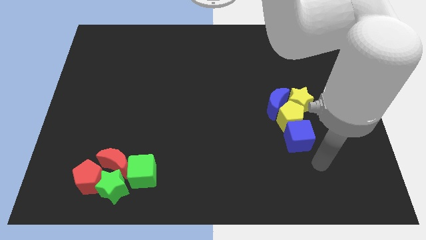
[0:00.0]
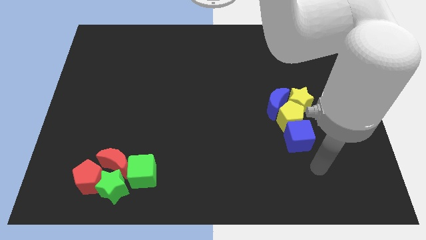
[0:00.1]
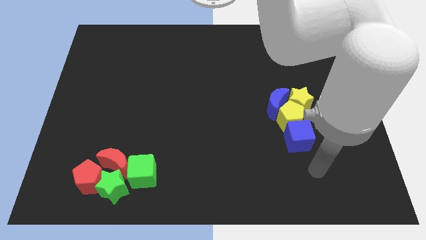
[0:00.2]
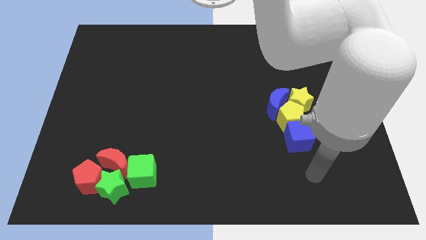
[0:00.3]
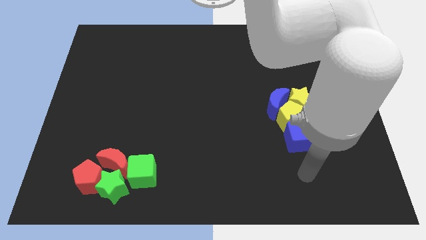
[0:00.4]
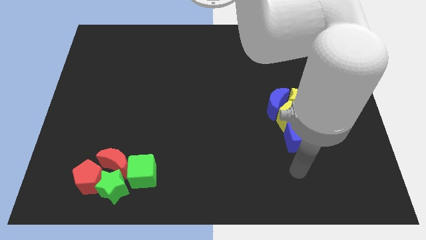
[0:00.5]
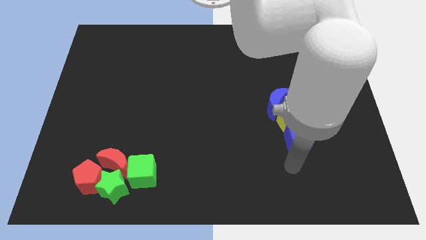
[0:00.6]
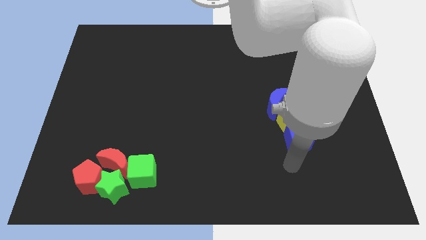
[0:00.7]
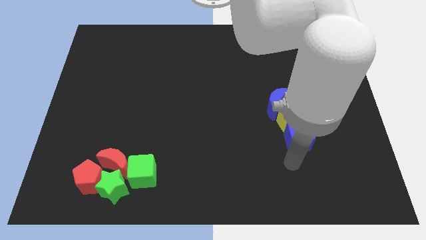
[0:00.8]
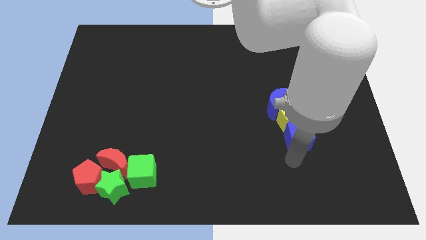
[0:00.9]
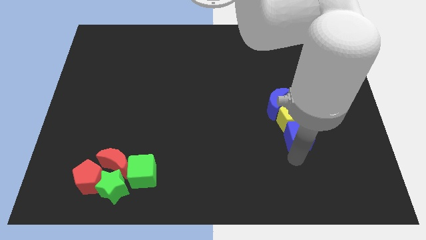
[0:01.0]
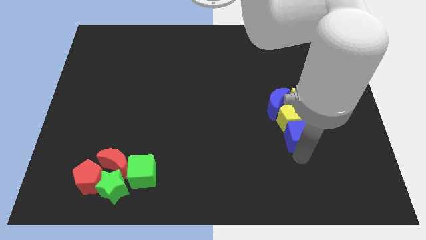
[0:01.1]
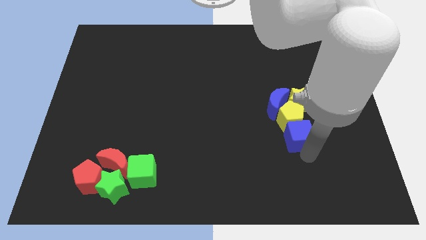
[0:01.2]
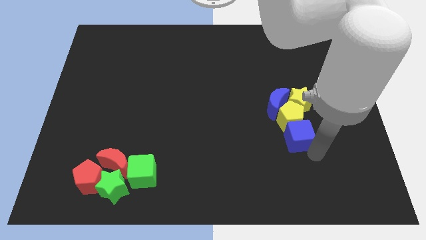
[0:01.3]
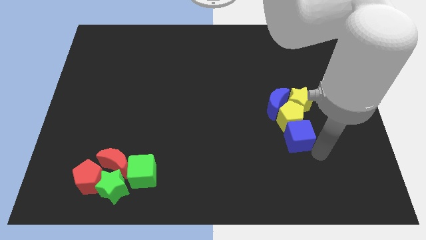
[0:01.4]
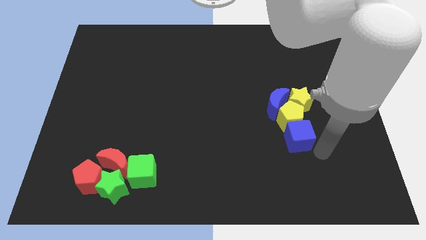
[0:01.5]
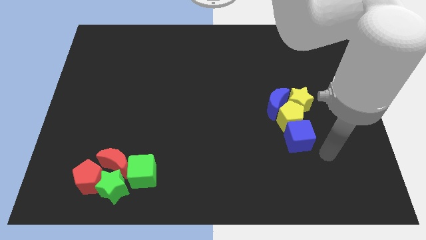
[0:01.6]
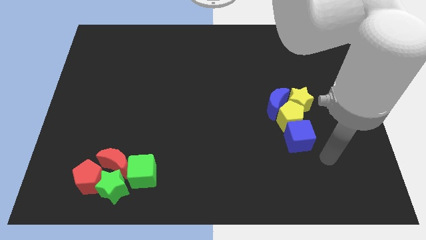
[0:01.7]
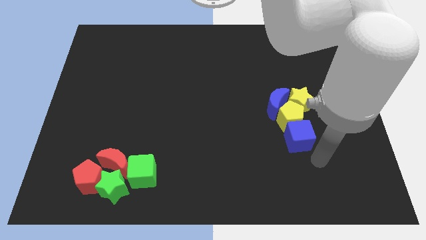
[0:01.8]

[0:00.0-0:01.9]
tap the blue cube

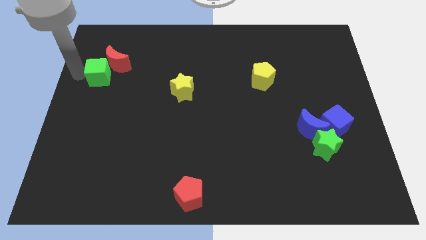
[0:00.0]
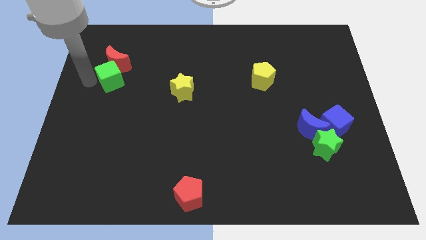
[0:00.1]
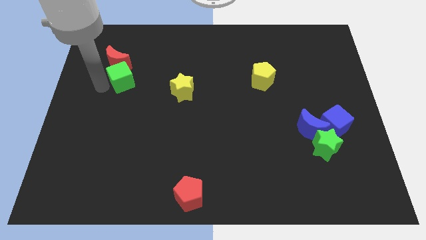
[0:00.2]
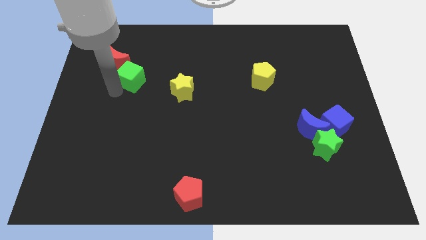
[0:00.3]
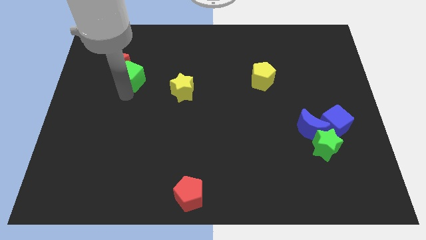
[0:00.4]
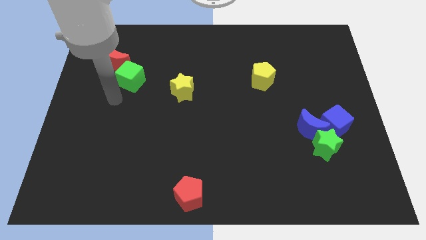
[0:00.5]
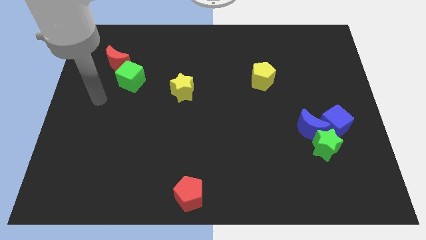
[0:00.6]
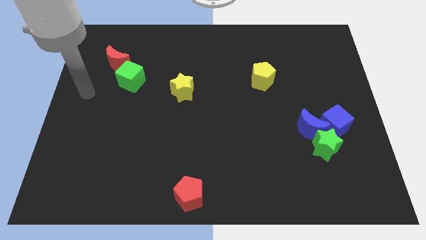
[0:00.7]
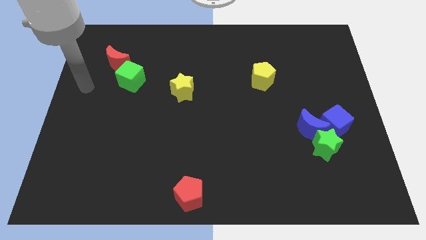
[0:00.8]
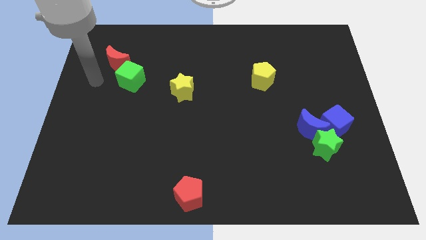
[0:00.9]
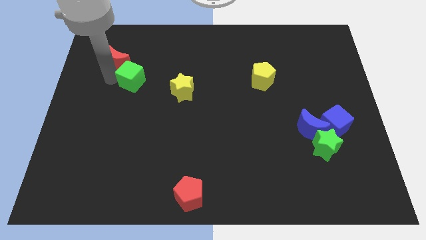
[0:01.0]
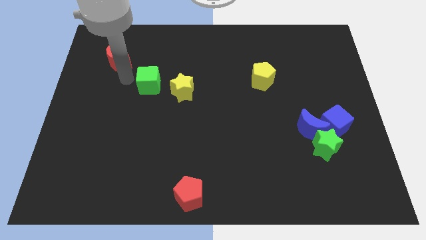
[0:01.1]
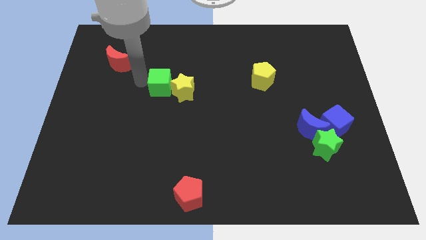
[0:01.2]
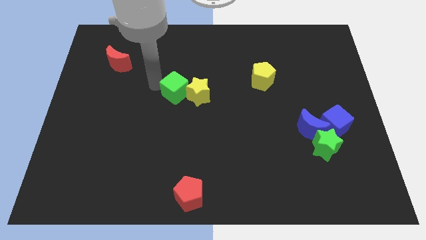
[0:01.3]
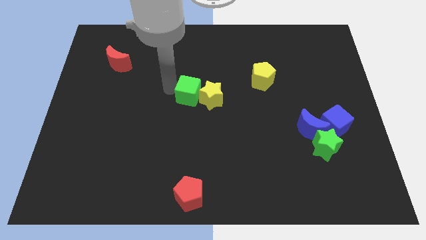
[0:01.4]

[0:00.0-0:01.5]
push green cube into the yellow star

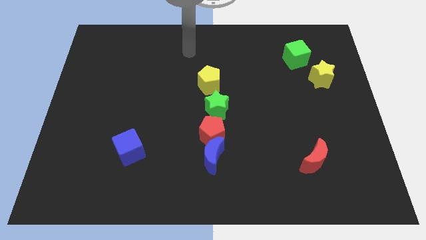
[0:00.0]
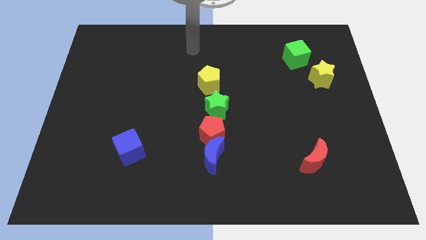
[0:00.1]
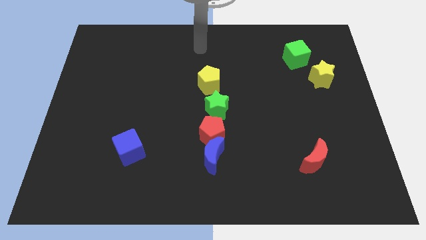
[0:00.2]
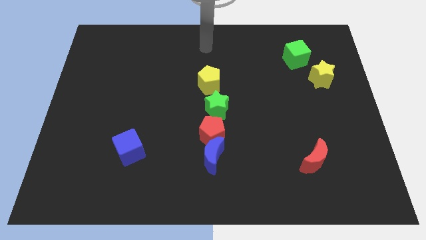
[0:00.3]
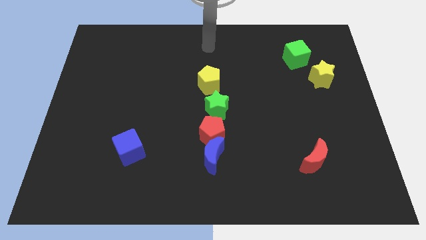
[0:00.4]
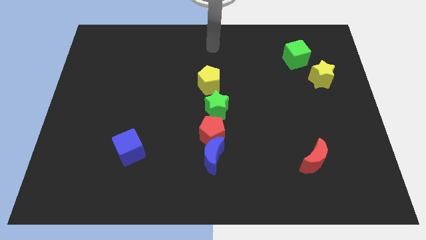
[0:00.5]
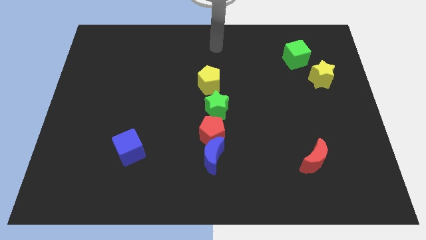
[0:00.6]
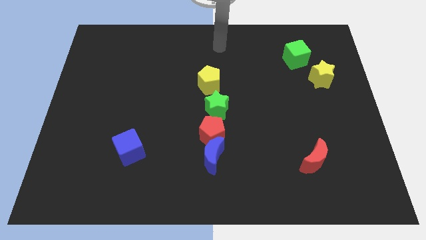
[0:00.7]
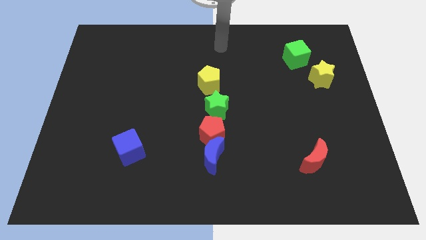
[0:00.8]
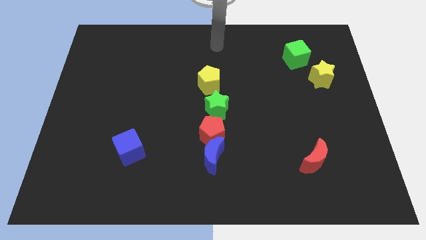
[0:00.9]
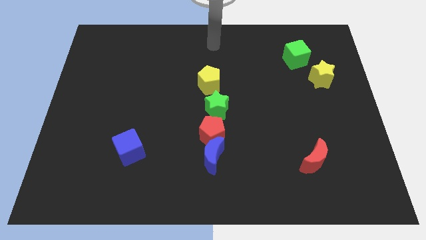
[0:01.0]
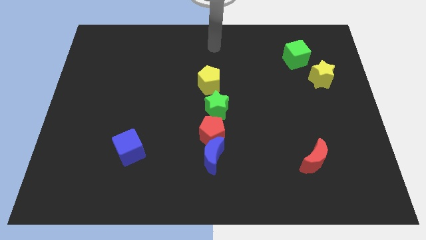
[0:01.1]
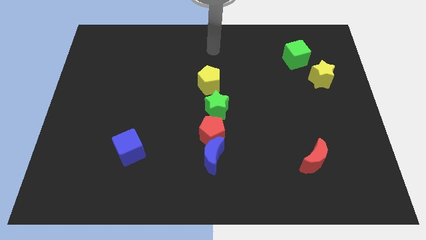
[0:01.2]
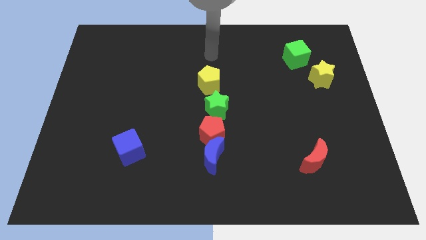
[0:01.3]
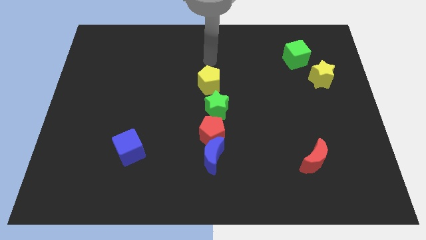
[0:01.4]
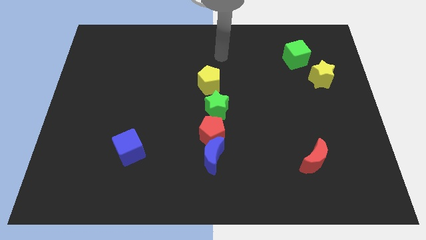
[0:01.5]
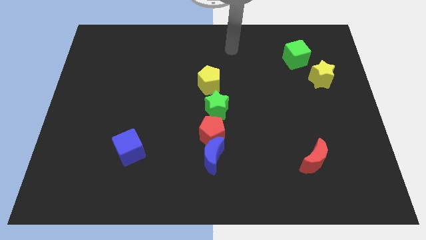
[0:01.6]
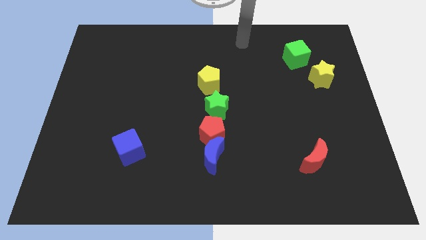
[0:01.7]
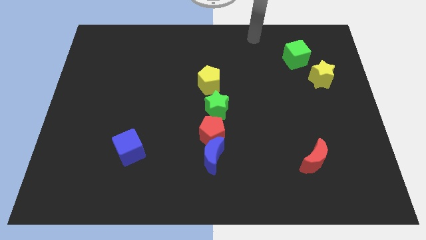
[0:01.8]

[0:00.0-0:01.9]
move your hand away from the yellow pentagon

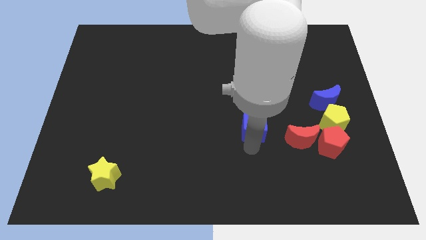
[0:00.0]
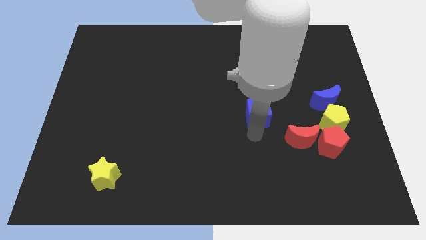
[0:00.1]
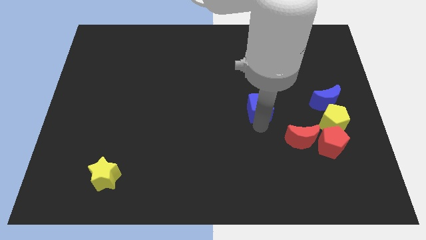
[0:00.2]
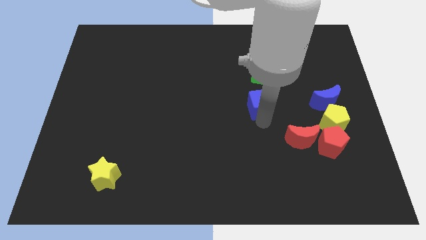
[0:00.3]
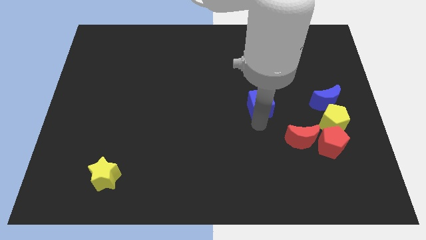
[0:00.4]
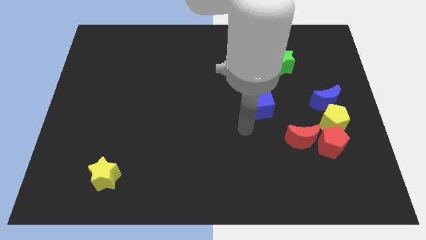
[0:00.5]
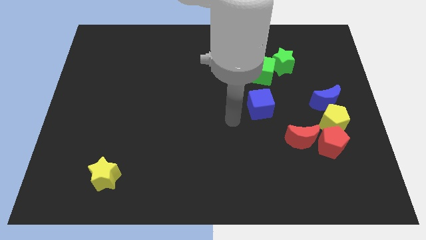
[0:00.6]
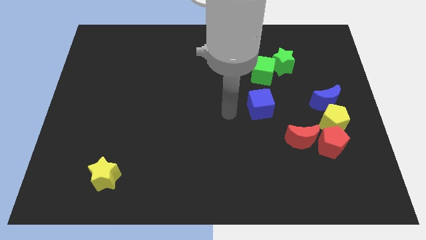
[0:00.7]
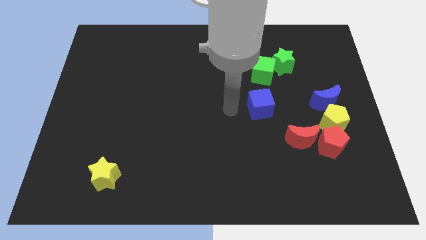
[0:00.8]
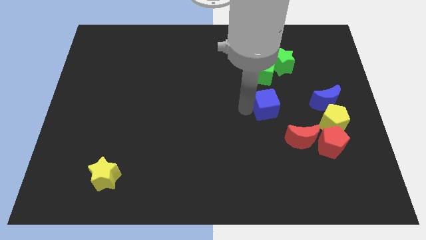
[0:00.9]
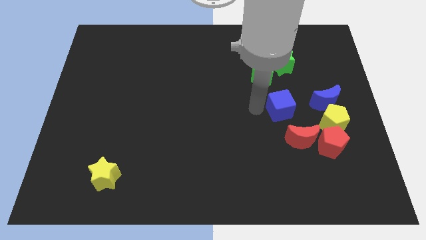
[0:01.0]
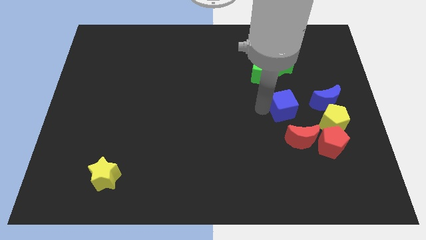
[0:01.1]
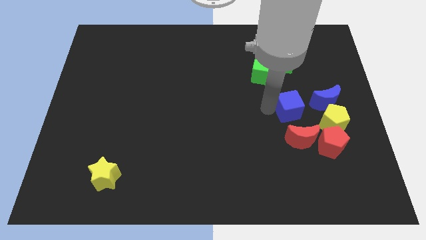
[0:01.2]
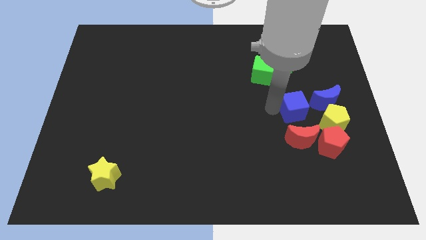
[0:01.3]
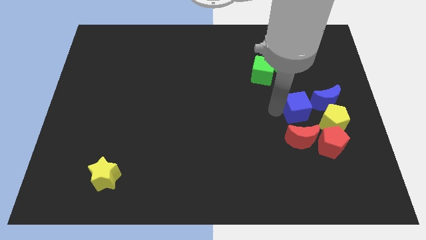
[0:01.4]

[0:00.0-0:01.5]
put the blue cube vertically above the red moon

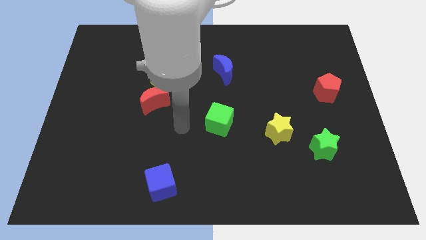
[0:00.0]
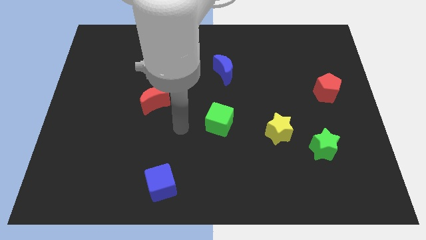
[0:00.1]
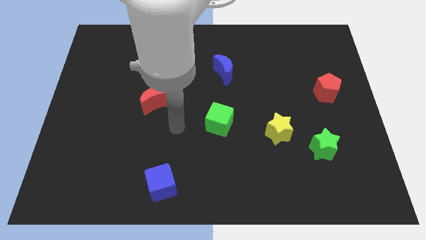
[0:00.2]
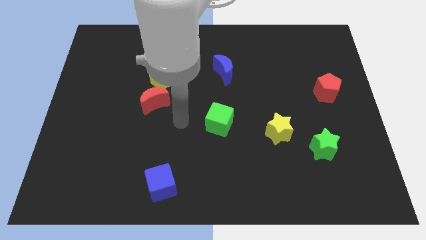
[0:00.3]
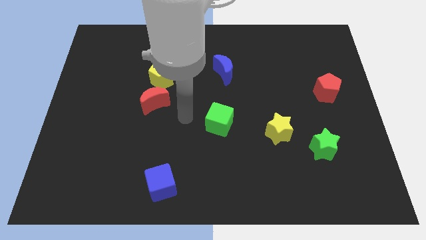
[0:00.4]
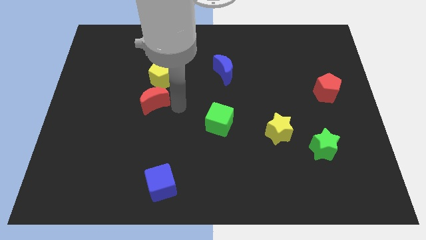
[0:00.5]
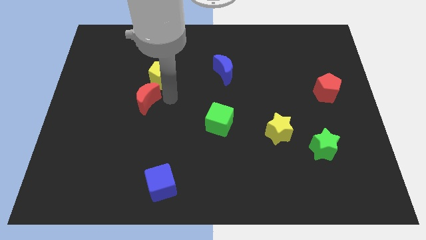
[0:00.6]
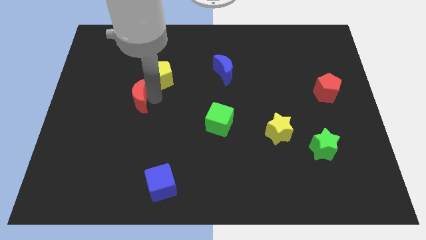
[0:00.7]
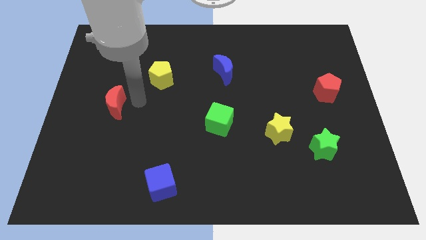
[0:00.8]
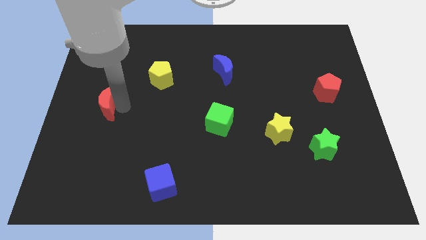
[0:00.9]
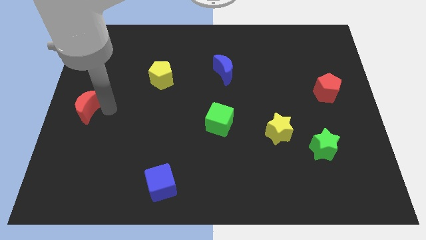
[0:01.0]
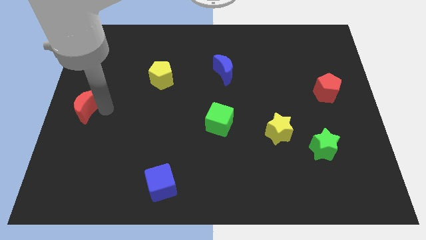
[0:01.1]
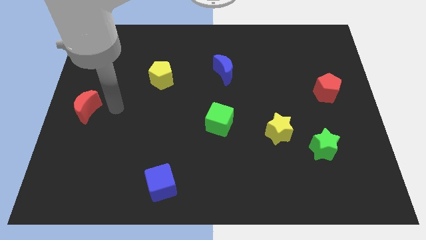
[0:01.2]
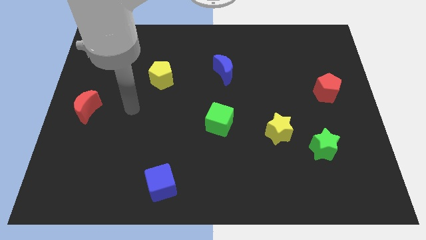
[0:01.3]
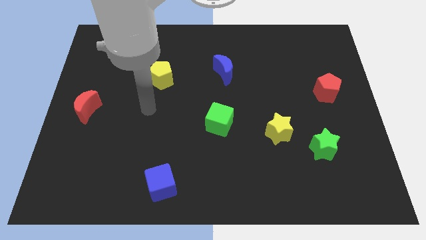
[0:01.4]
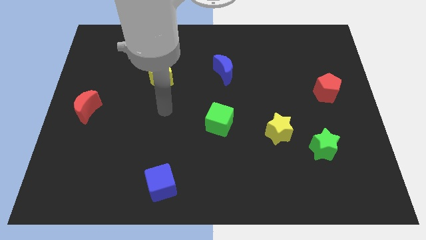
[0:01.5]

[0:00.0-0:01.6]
move red crescent to the left center of the board

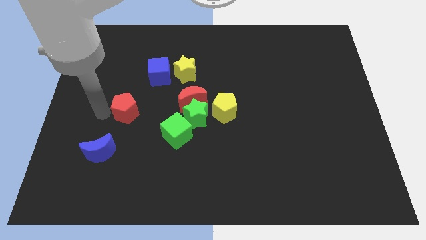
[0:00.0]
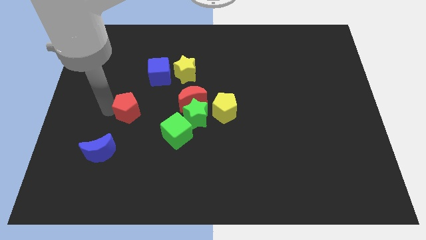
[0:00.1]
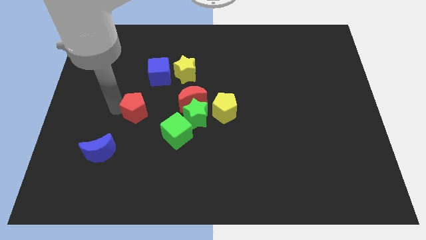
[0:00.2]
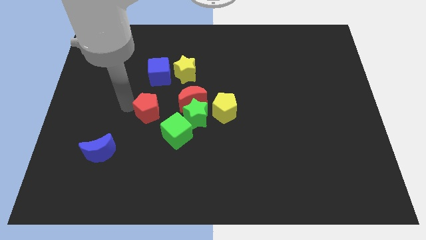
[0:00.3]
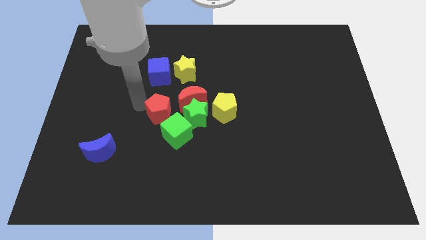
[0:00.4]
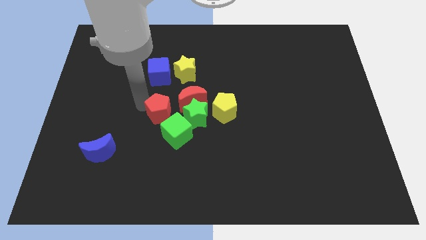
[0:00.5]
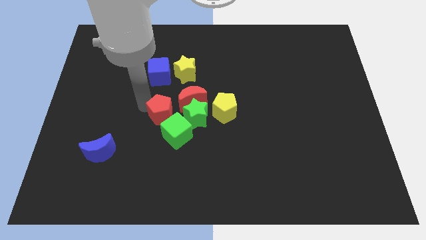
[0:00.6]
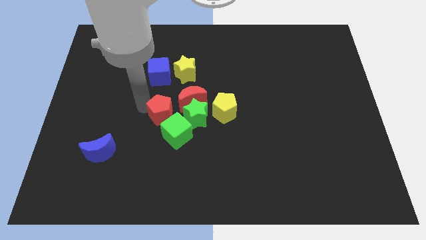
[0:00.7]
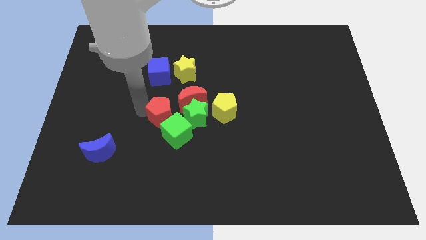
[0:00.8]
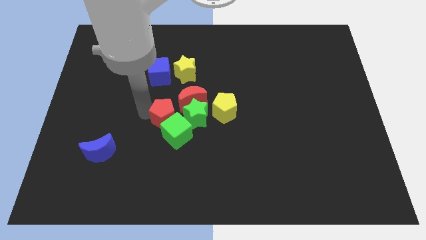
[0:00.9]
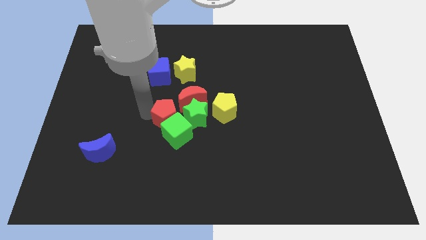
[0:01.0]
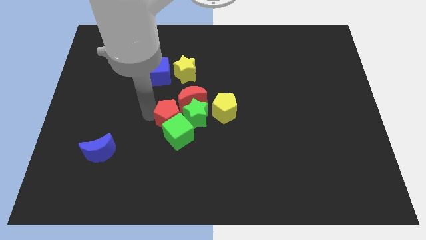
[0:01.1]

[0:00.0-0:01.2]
place the red pentagon above the green cube
